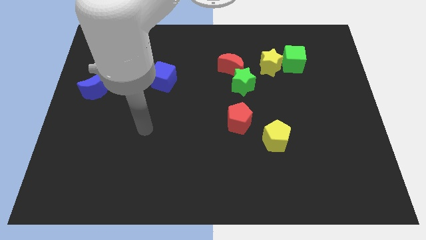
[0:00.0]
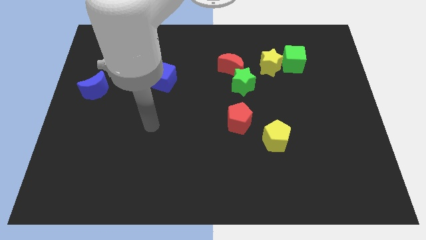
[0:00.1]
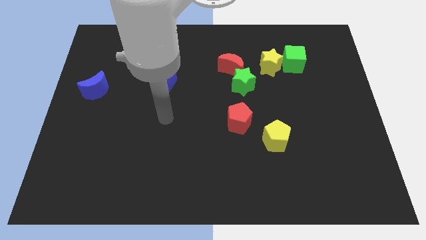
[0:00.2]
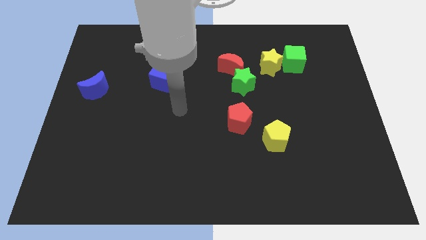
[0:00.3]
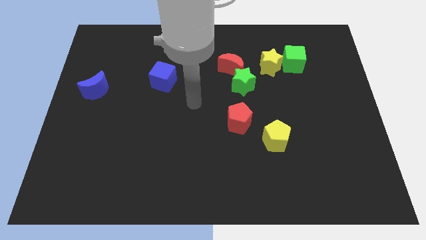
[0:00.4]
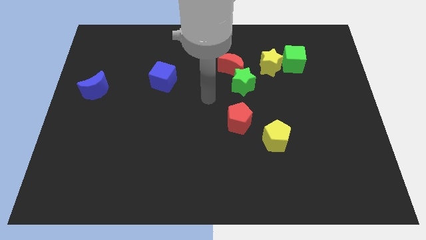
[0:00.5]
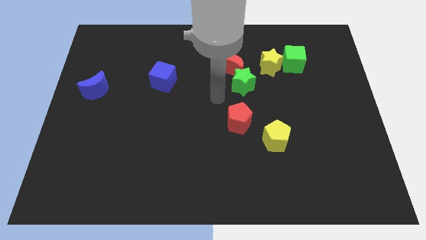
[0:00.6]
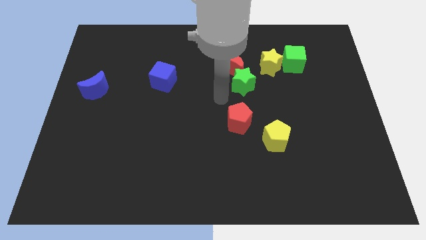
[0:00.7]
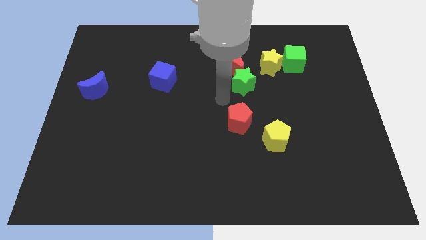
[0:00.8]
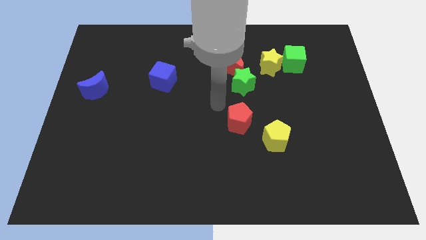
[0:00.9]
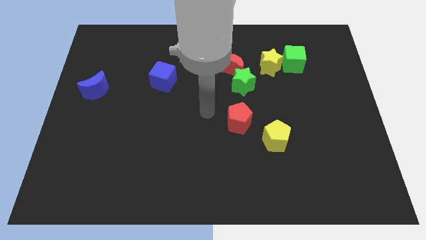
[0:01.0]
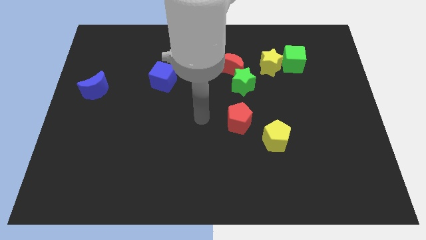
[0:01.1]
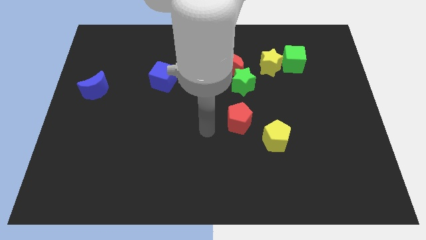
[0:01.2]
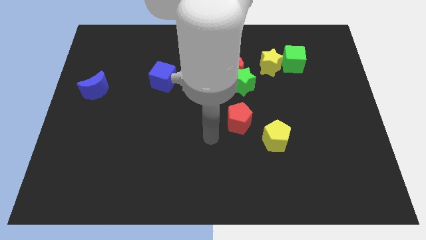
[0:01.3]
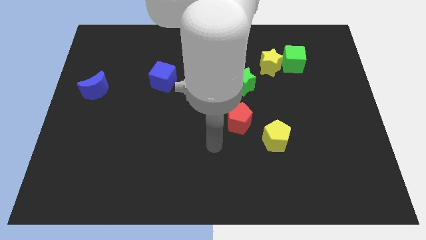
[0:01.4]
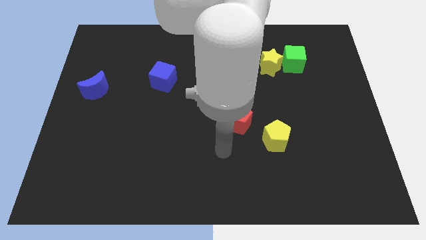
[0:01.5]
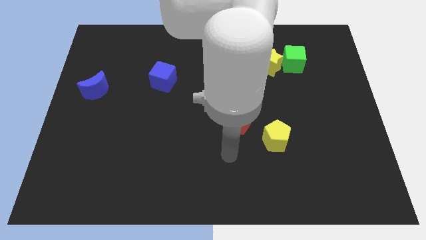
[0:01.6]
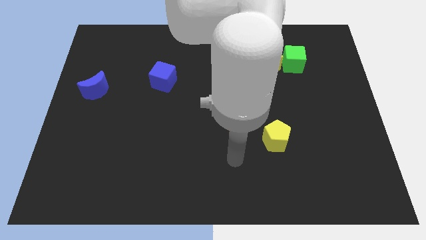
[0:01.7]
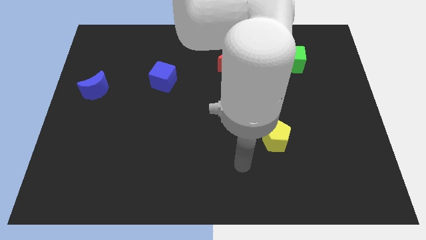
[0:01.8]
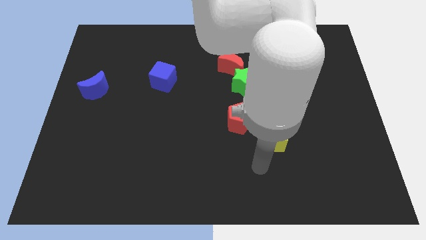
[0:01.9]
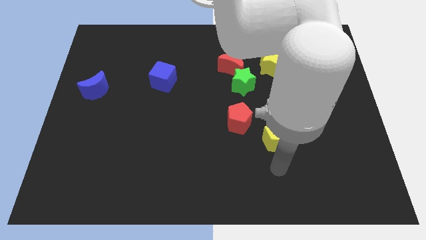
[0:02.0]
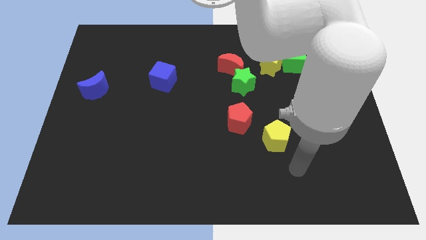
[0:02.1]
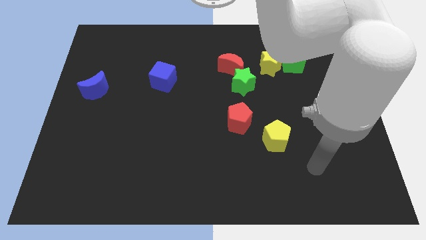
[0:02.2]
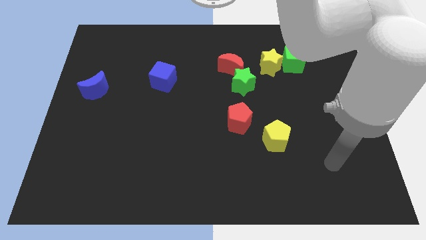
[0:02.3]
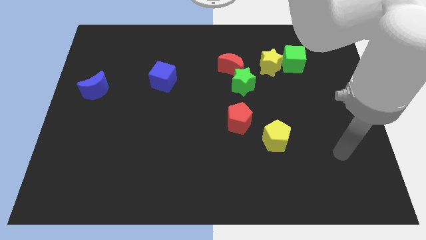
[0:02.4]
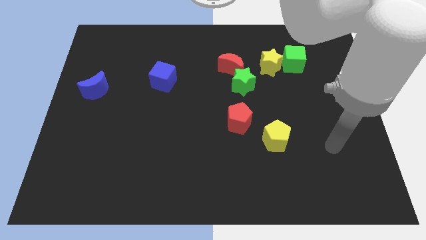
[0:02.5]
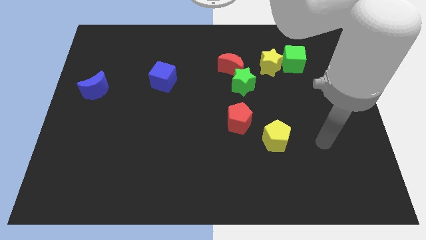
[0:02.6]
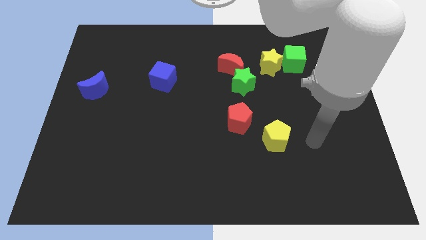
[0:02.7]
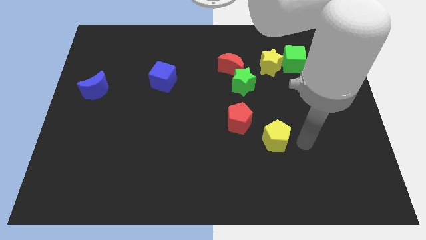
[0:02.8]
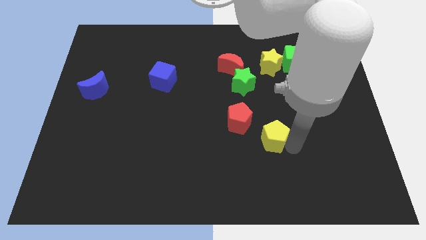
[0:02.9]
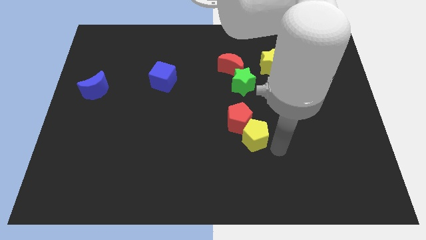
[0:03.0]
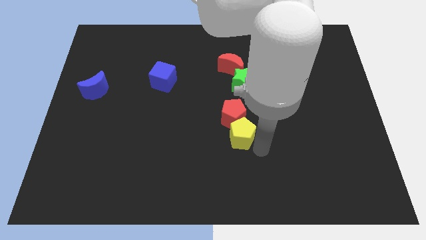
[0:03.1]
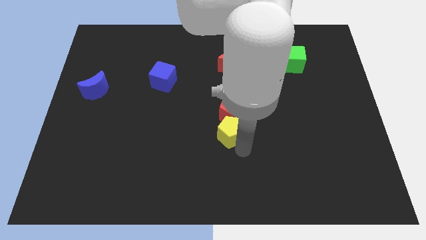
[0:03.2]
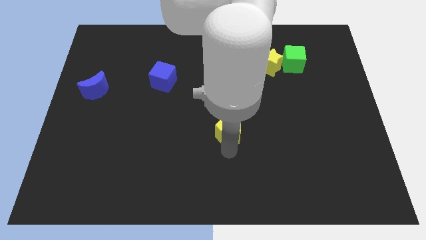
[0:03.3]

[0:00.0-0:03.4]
place the yellow pentagon below the red pentagon

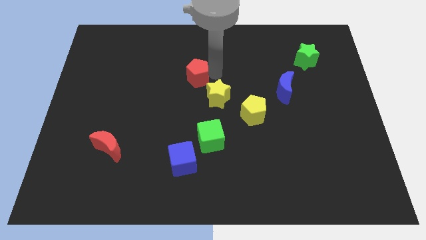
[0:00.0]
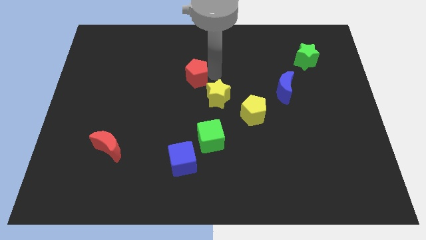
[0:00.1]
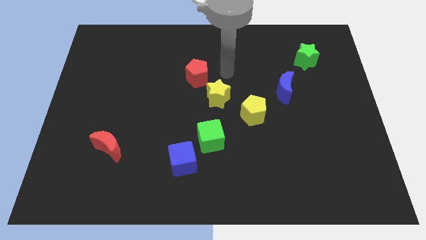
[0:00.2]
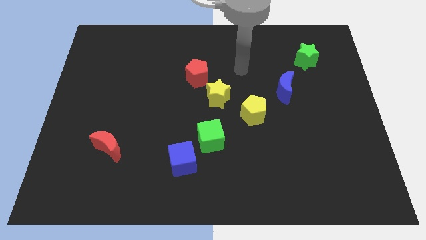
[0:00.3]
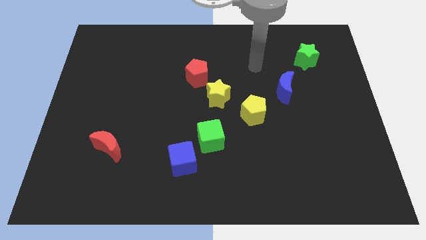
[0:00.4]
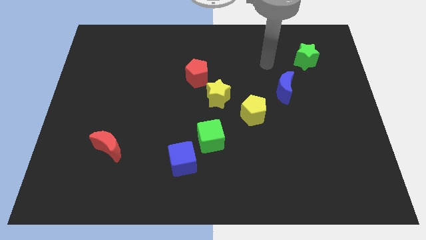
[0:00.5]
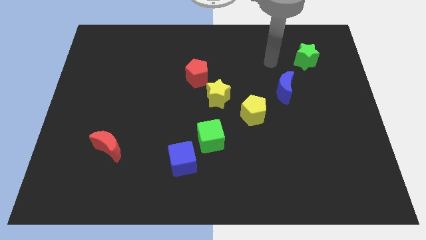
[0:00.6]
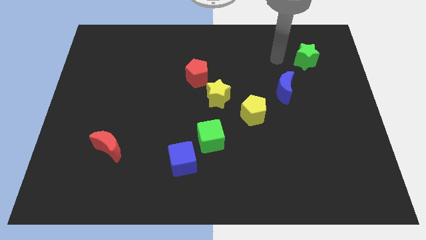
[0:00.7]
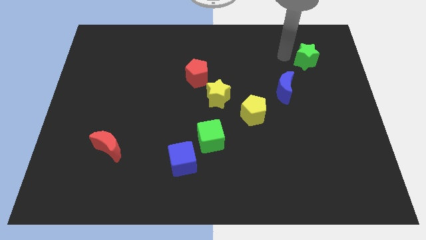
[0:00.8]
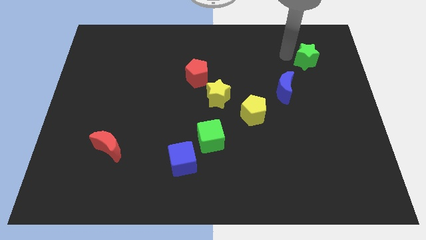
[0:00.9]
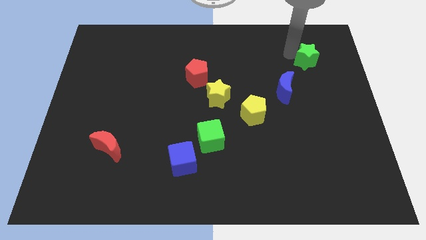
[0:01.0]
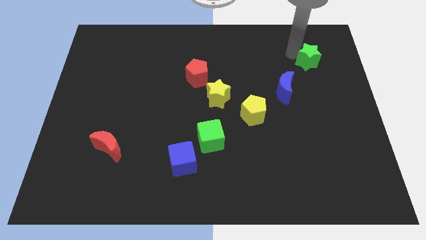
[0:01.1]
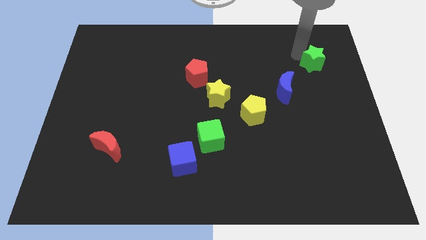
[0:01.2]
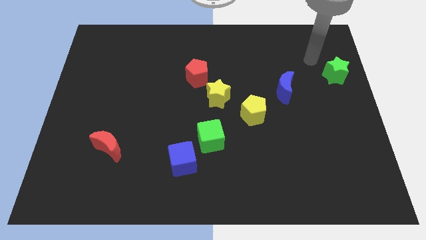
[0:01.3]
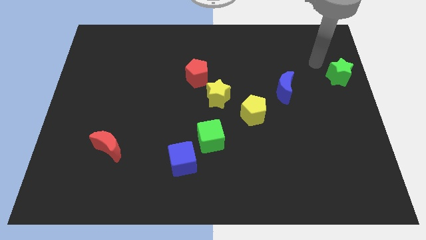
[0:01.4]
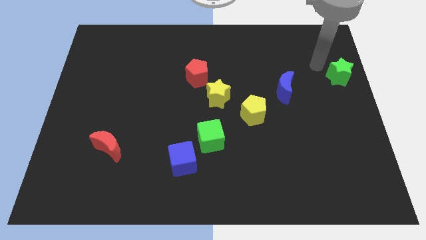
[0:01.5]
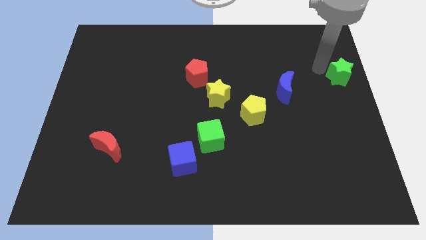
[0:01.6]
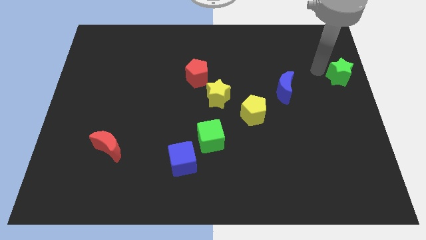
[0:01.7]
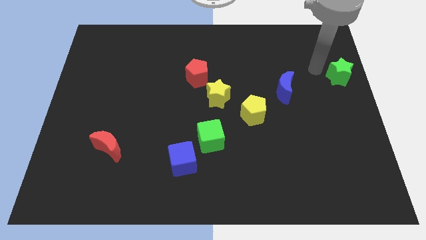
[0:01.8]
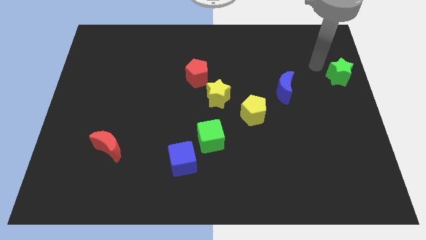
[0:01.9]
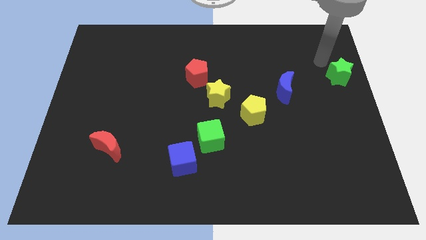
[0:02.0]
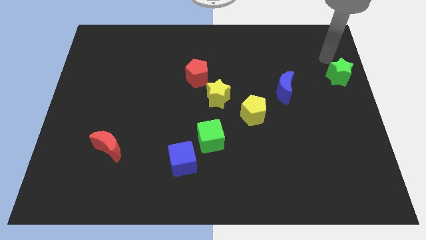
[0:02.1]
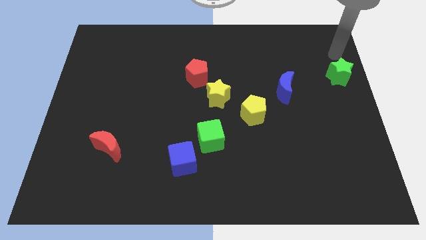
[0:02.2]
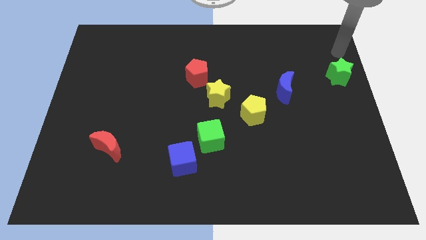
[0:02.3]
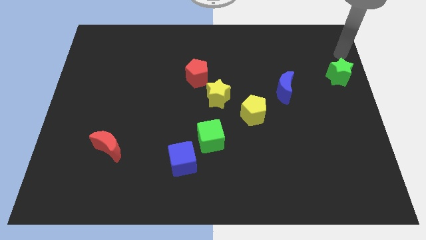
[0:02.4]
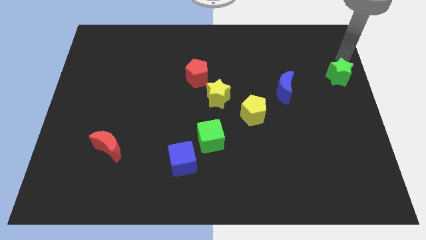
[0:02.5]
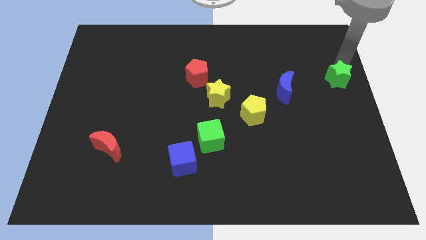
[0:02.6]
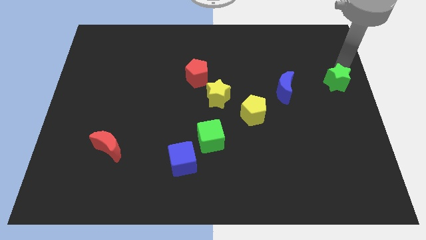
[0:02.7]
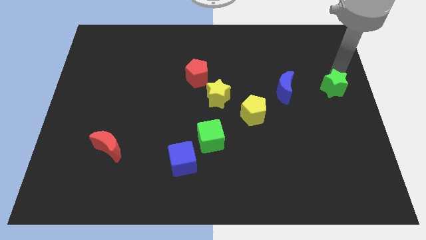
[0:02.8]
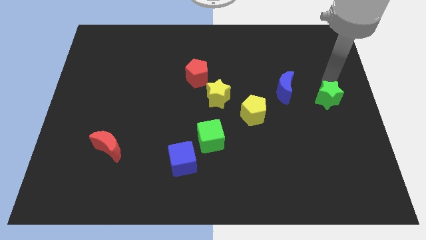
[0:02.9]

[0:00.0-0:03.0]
place the green star right to the blue moon

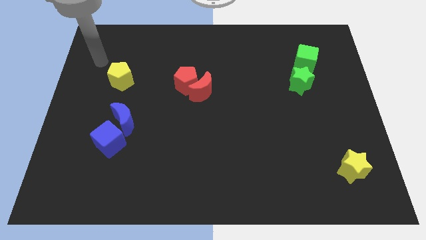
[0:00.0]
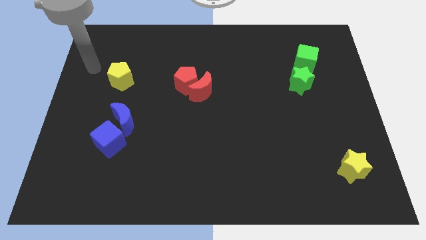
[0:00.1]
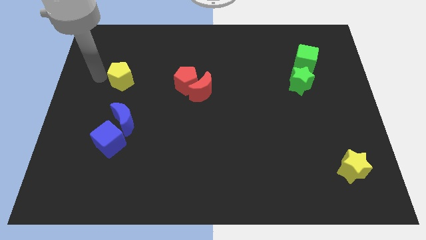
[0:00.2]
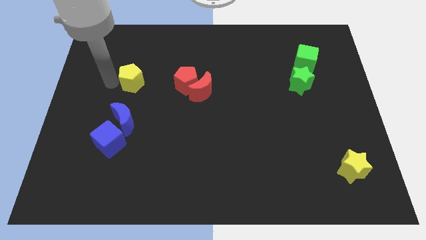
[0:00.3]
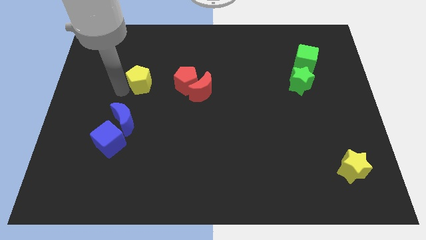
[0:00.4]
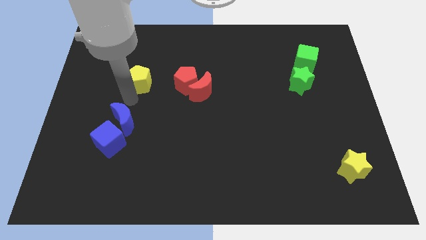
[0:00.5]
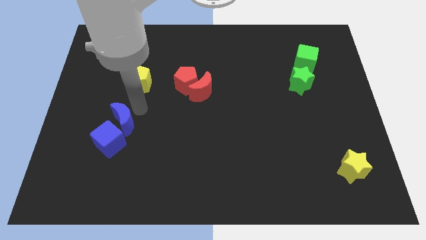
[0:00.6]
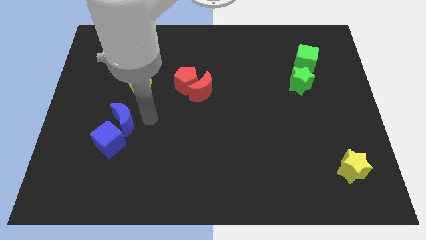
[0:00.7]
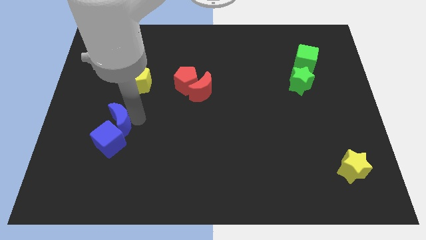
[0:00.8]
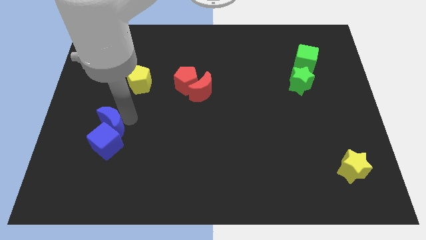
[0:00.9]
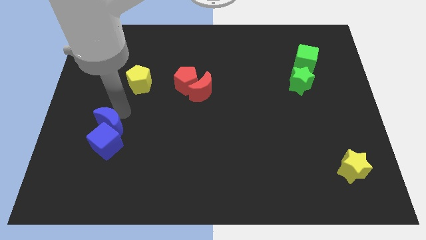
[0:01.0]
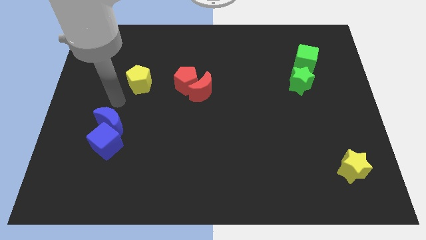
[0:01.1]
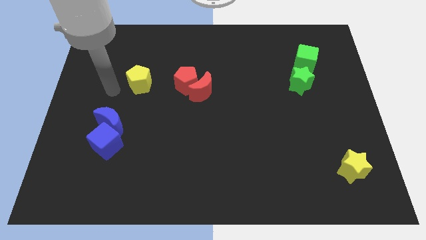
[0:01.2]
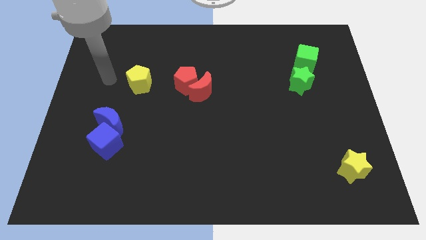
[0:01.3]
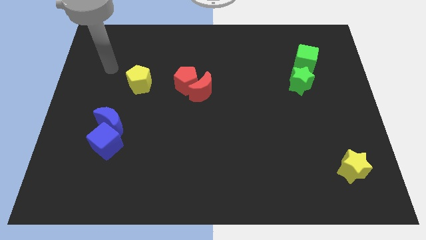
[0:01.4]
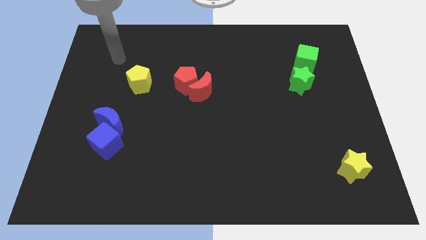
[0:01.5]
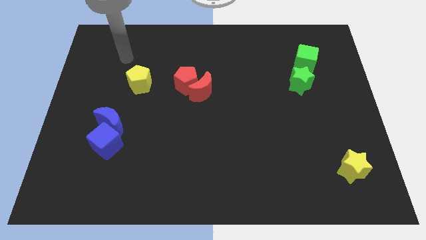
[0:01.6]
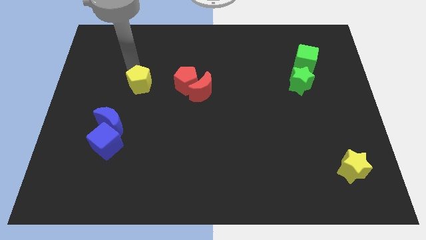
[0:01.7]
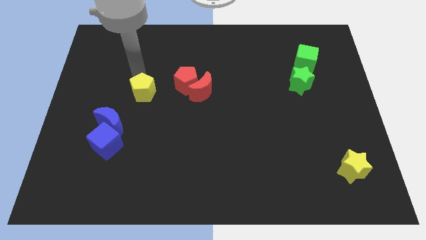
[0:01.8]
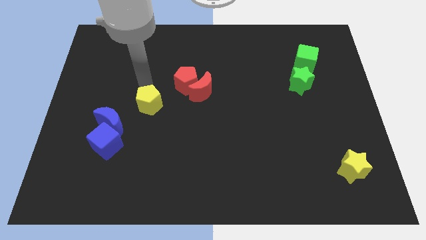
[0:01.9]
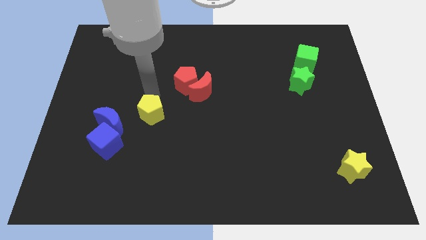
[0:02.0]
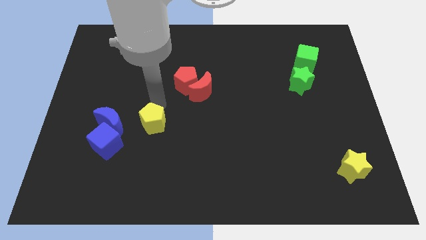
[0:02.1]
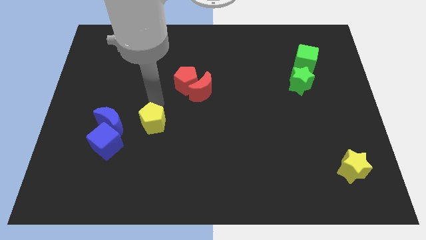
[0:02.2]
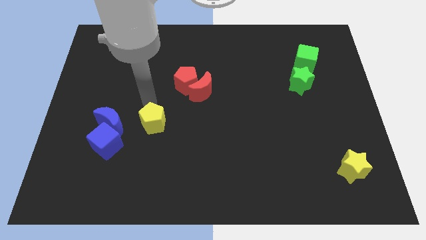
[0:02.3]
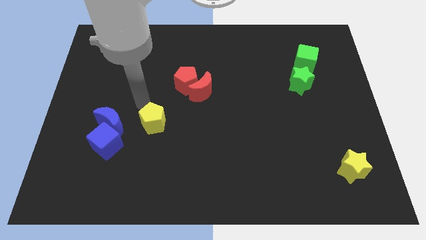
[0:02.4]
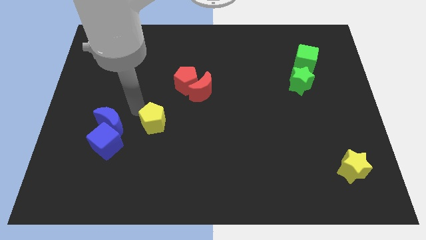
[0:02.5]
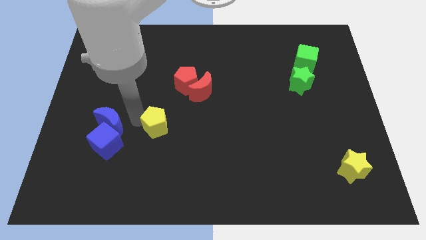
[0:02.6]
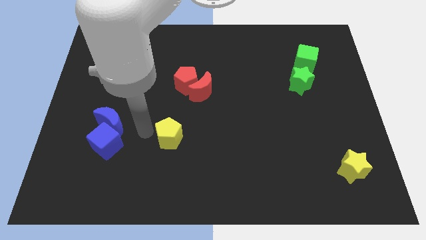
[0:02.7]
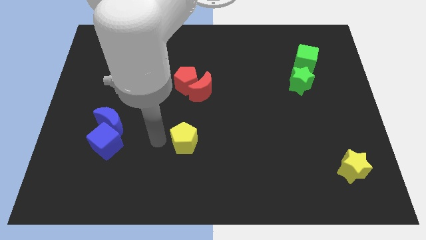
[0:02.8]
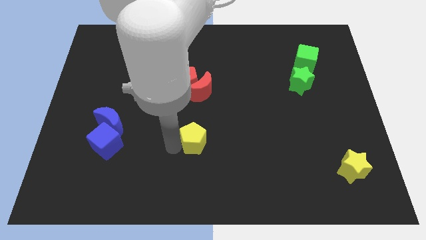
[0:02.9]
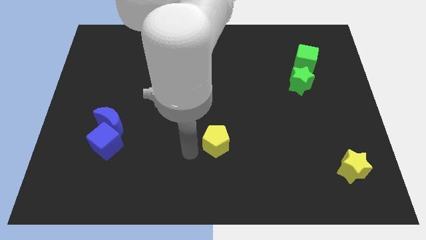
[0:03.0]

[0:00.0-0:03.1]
slide yellow pentagon to the right of blue cube
